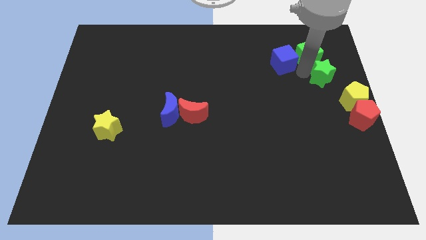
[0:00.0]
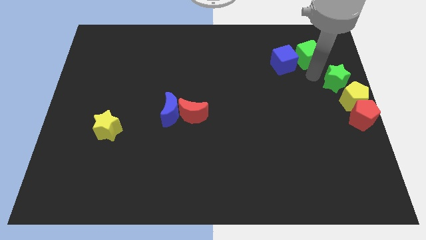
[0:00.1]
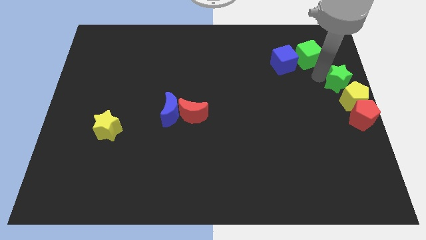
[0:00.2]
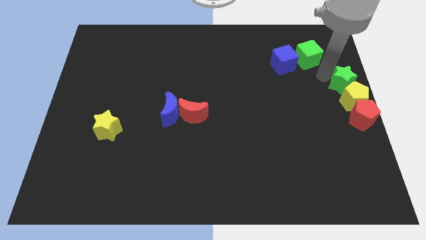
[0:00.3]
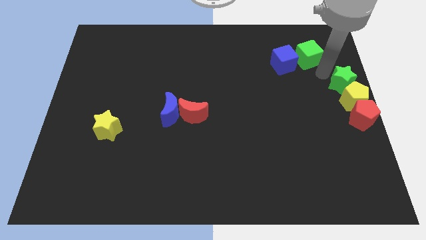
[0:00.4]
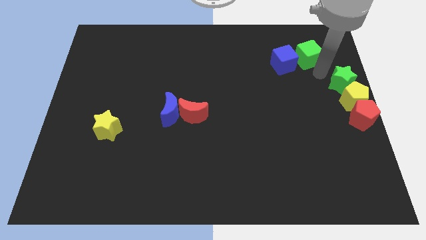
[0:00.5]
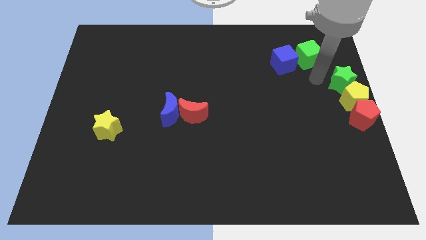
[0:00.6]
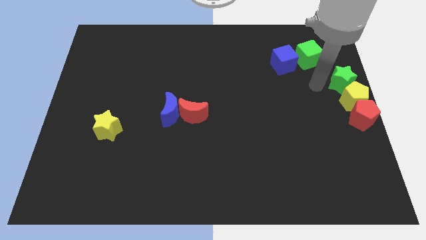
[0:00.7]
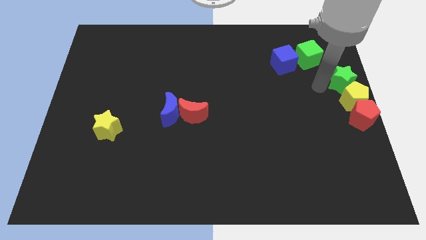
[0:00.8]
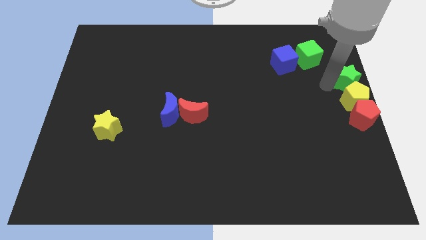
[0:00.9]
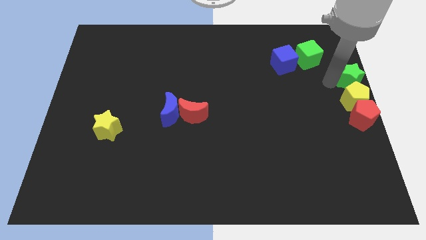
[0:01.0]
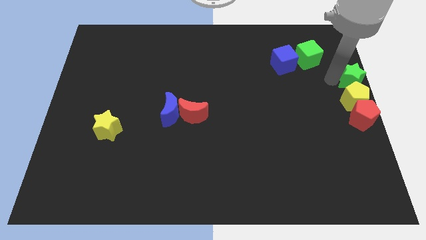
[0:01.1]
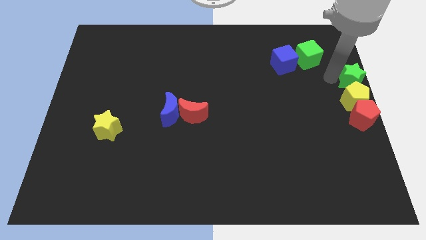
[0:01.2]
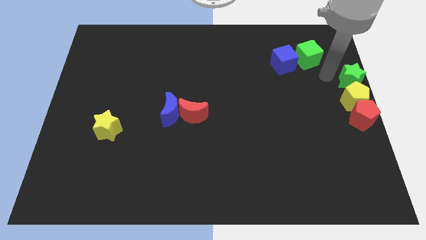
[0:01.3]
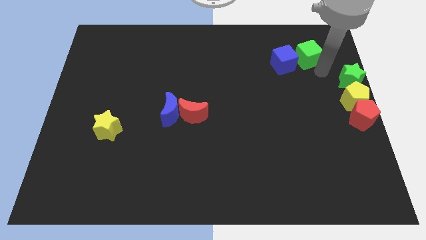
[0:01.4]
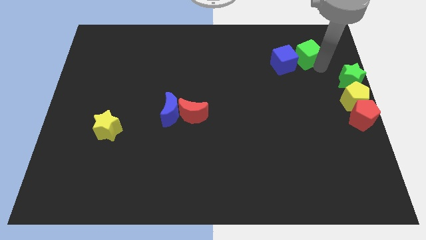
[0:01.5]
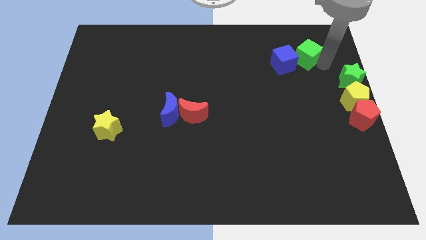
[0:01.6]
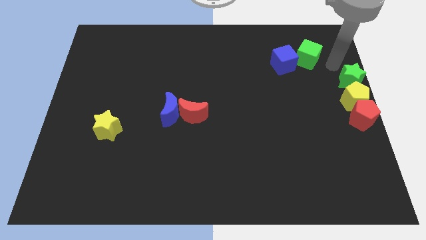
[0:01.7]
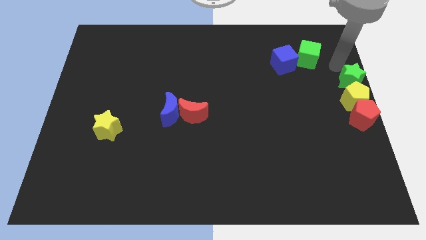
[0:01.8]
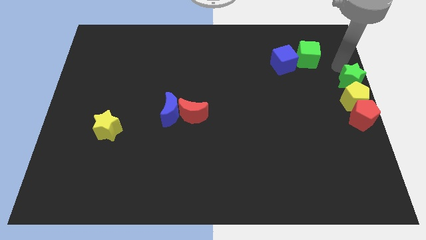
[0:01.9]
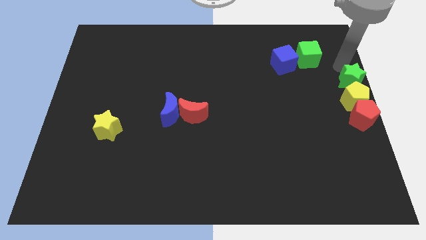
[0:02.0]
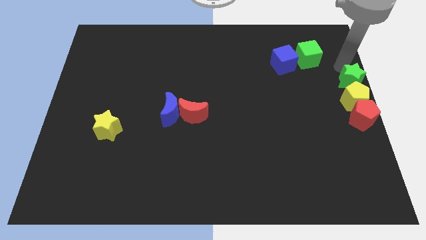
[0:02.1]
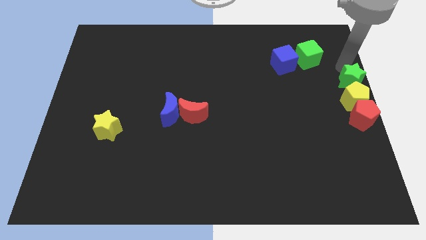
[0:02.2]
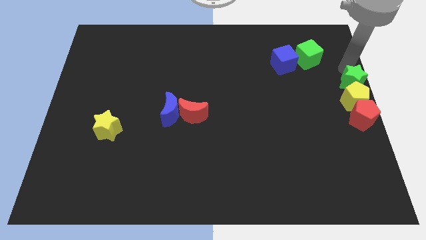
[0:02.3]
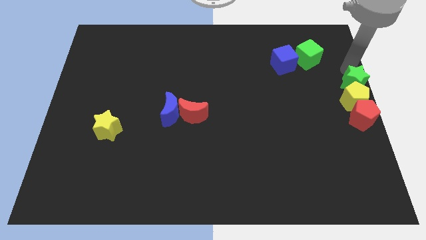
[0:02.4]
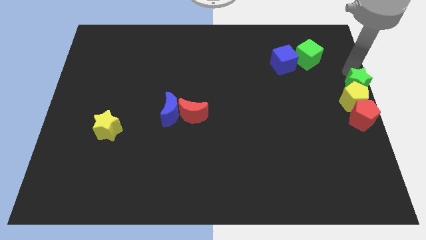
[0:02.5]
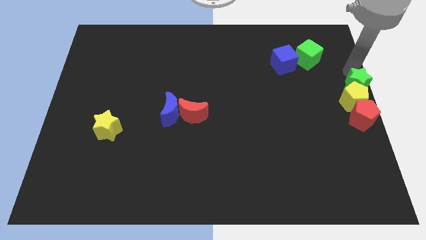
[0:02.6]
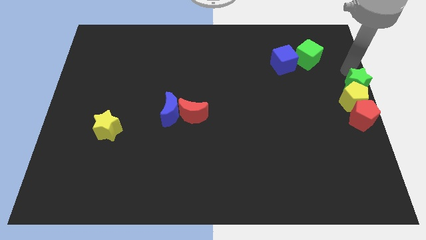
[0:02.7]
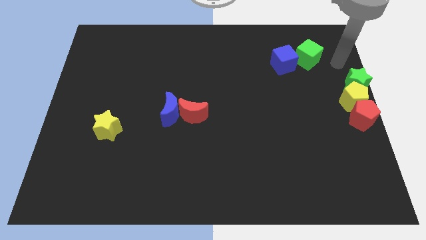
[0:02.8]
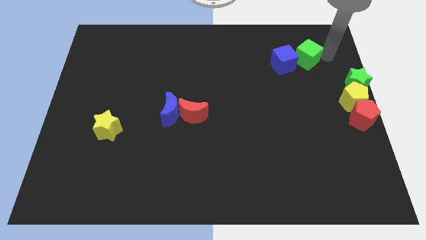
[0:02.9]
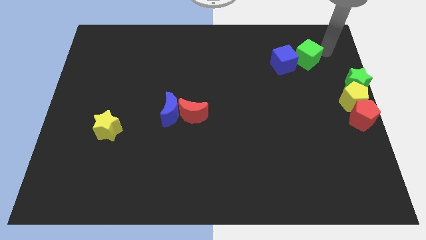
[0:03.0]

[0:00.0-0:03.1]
place the green star above the yellow pentagon

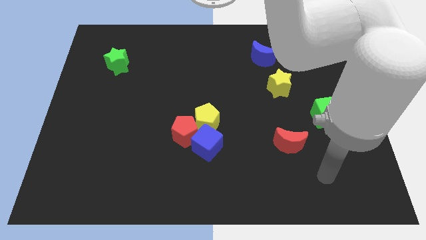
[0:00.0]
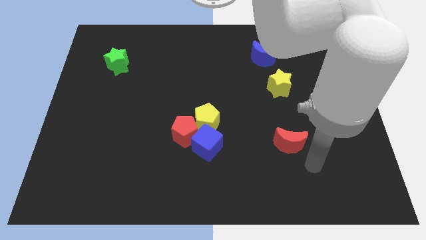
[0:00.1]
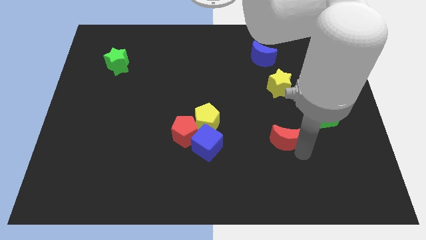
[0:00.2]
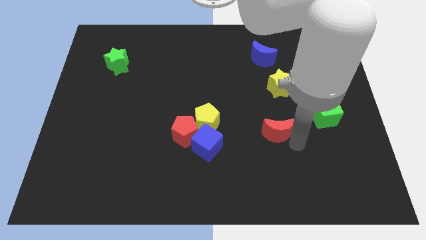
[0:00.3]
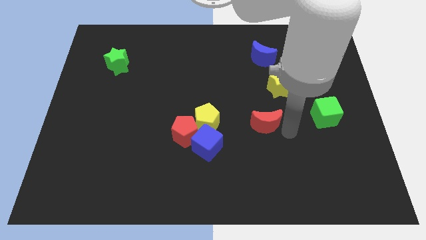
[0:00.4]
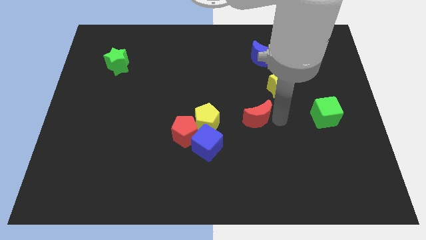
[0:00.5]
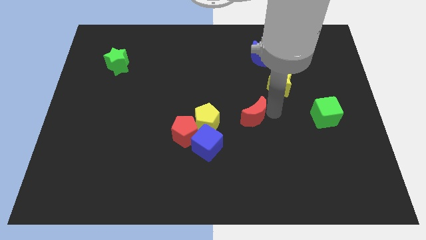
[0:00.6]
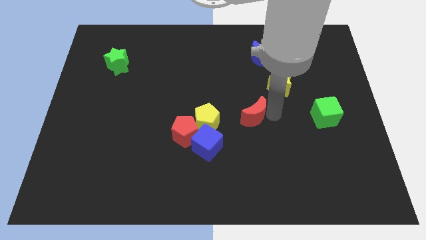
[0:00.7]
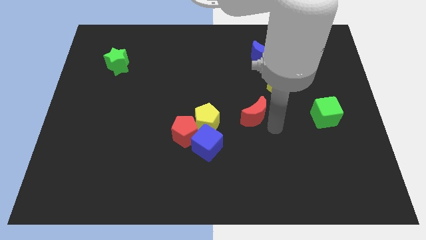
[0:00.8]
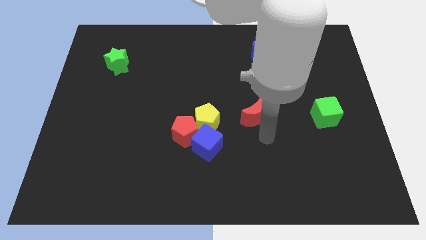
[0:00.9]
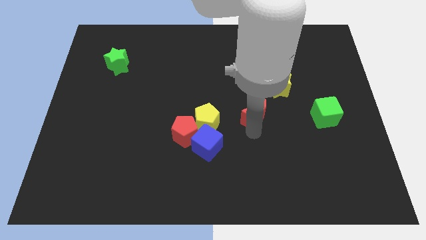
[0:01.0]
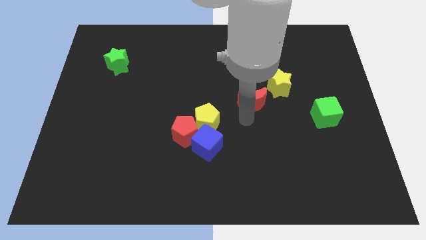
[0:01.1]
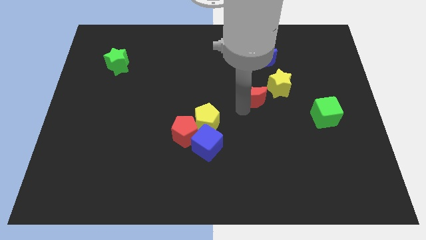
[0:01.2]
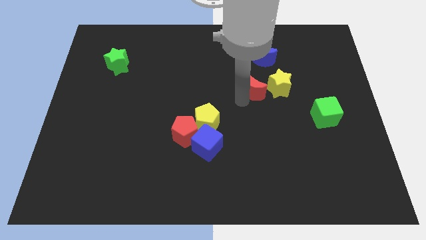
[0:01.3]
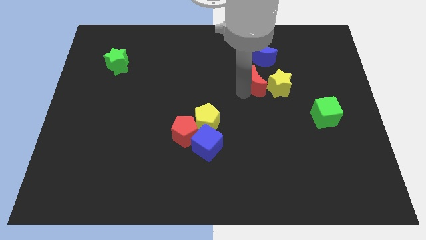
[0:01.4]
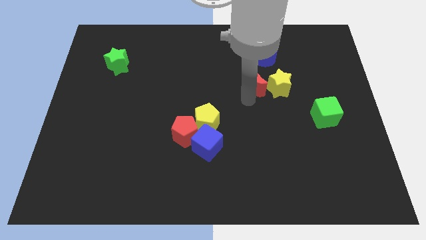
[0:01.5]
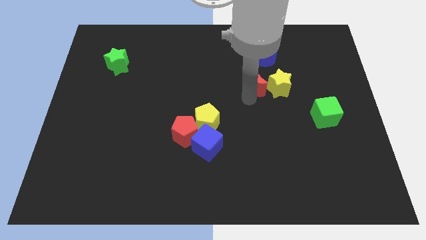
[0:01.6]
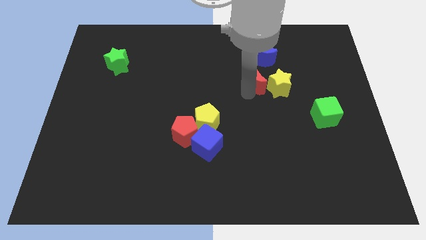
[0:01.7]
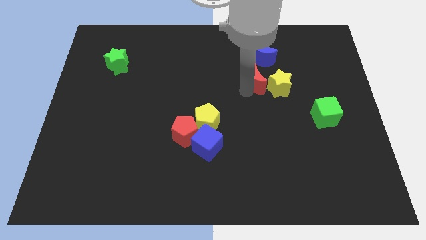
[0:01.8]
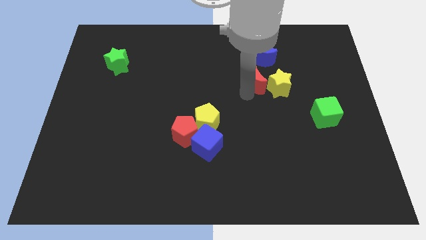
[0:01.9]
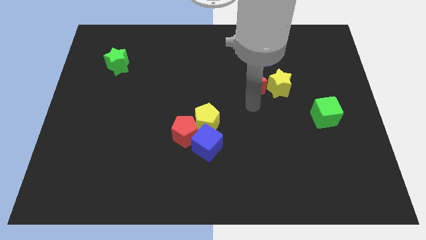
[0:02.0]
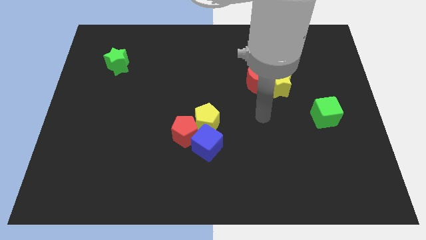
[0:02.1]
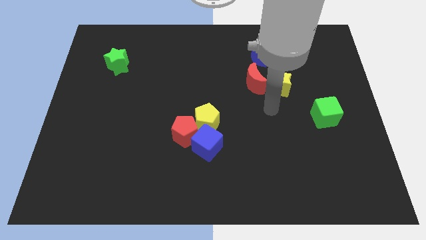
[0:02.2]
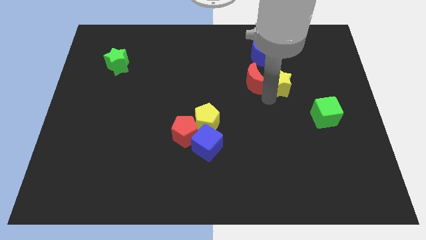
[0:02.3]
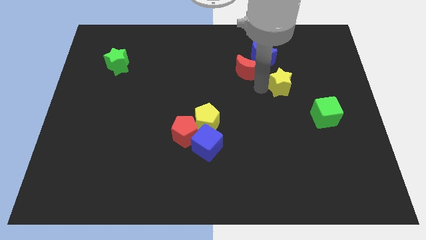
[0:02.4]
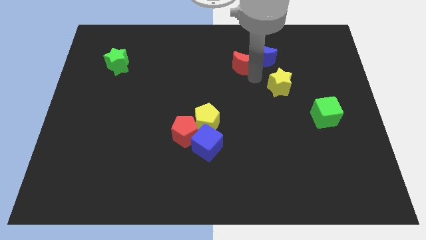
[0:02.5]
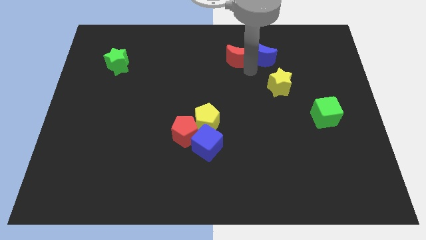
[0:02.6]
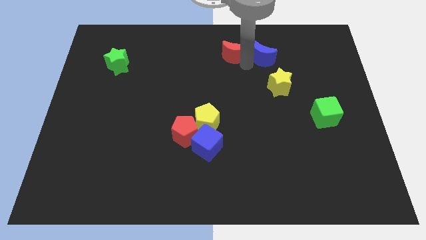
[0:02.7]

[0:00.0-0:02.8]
place red crescent left to the yellow star

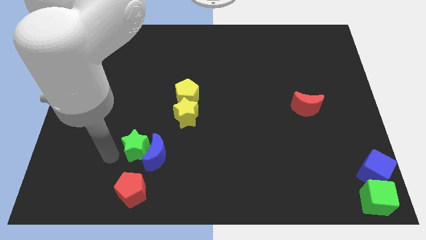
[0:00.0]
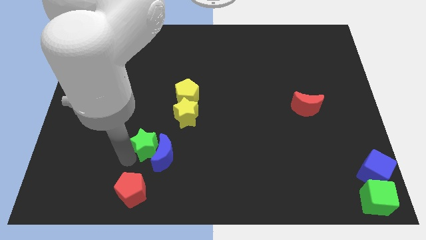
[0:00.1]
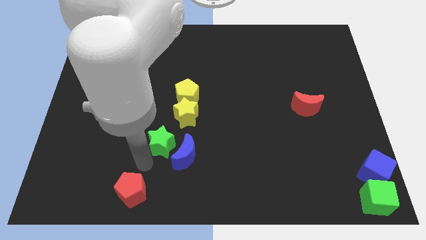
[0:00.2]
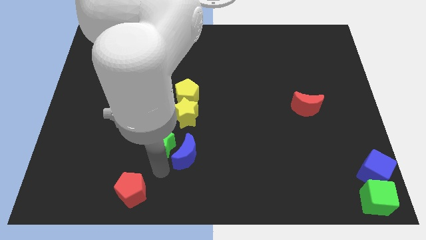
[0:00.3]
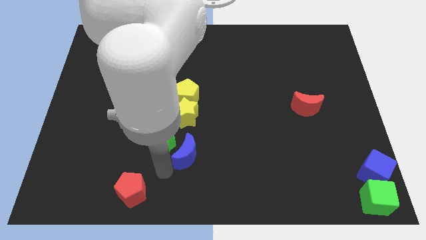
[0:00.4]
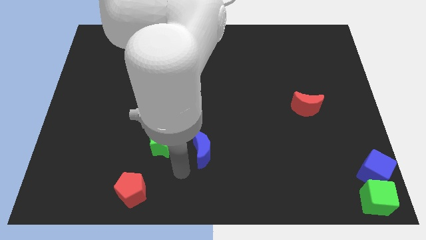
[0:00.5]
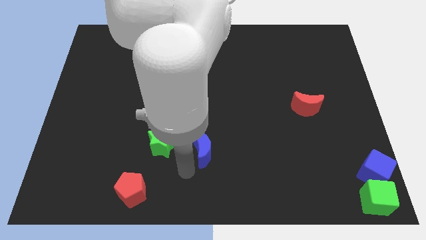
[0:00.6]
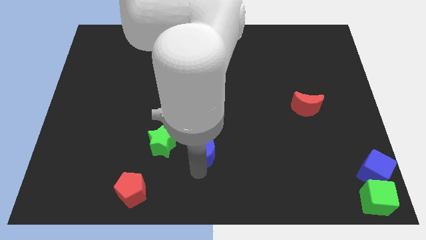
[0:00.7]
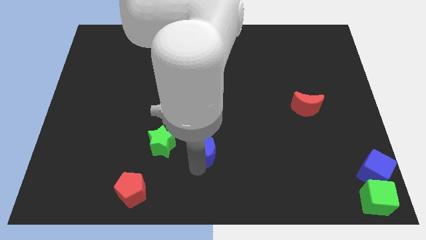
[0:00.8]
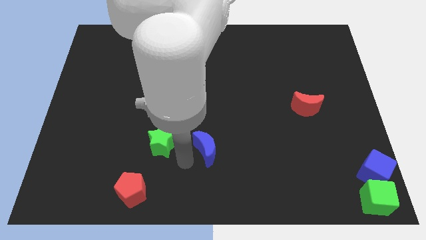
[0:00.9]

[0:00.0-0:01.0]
separate the green star and blue moon

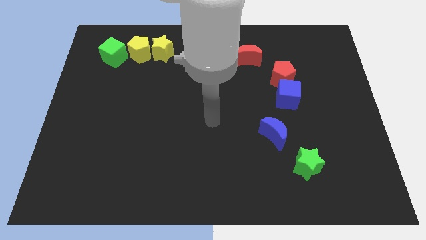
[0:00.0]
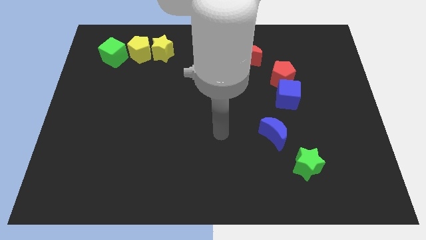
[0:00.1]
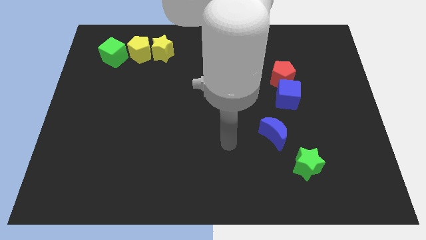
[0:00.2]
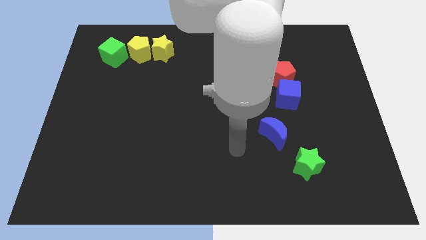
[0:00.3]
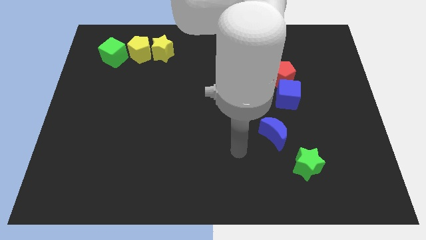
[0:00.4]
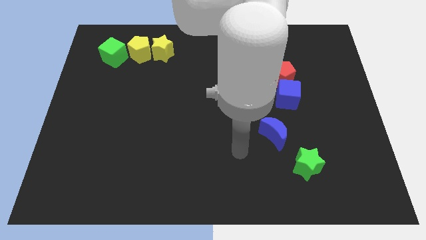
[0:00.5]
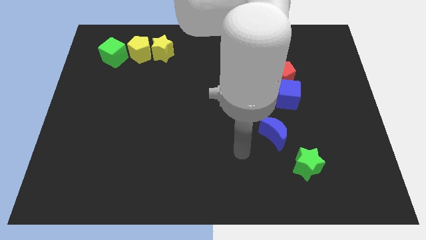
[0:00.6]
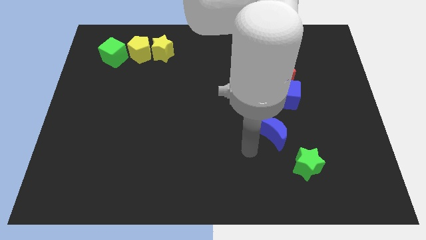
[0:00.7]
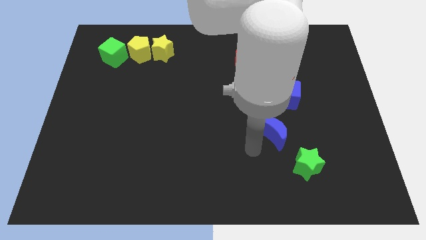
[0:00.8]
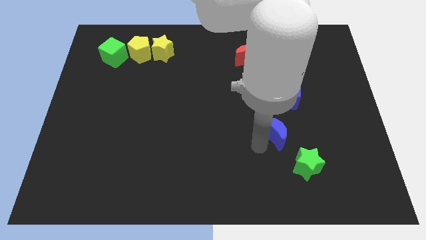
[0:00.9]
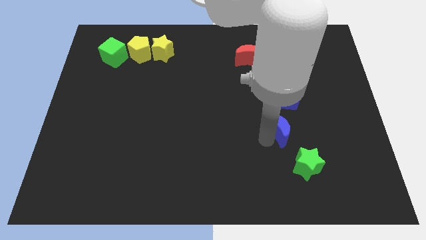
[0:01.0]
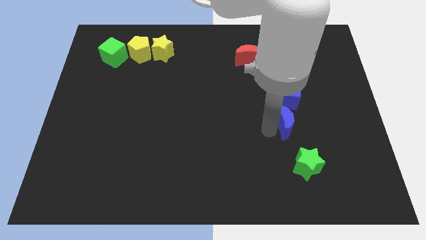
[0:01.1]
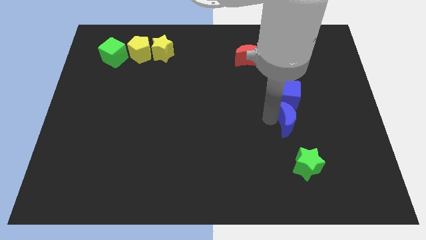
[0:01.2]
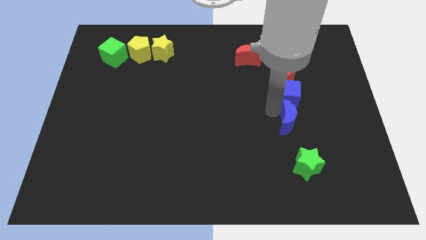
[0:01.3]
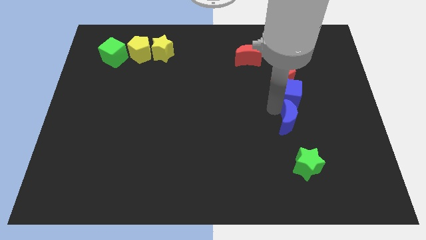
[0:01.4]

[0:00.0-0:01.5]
push the blue moon down to the blue cube

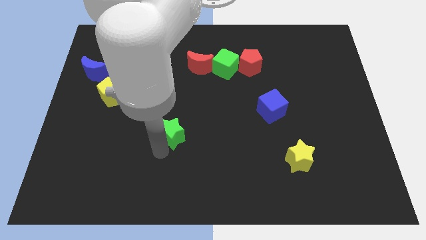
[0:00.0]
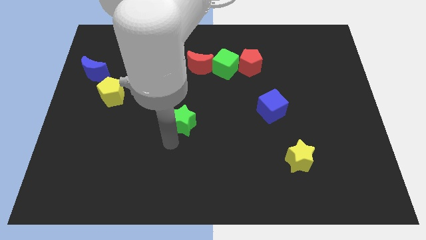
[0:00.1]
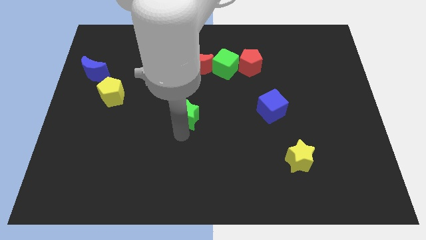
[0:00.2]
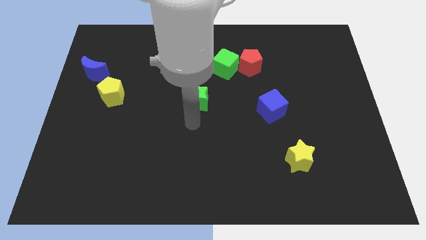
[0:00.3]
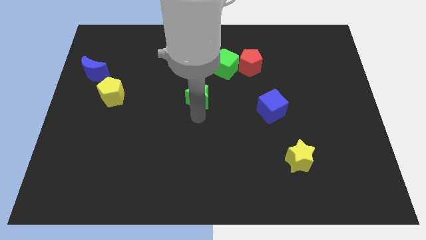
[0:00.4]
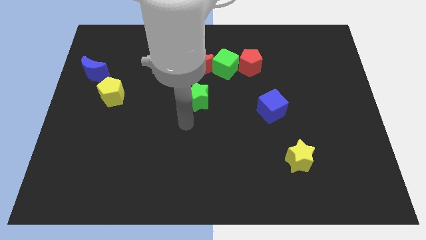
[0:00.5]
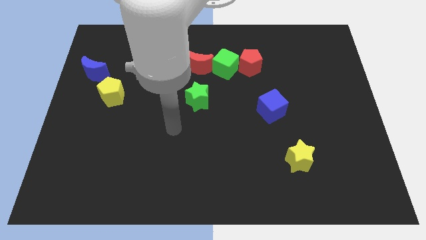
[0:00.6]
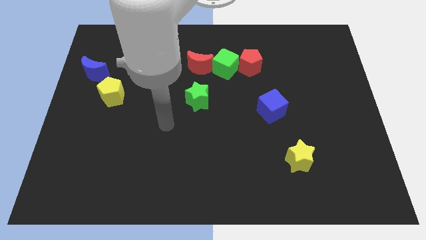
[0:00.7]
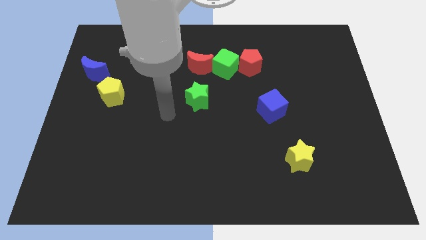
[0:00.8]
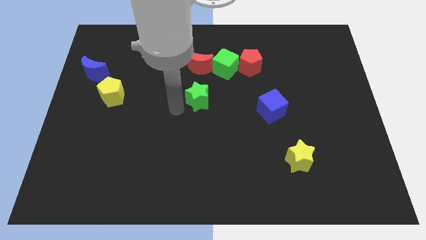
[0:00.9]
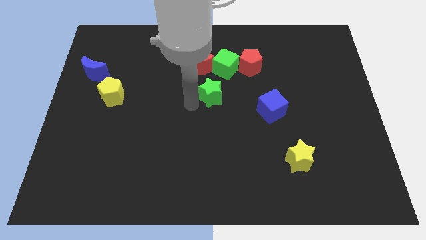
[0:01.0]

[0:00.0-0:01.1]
put the green star to the right of the yellow pentagon
